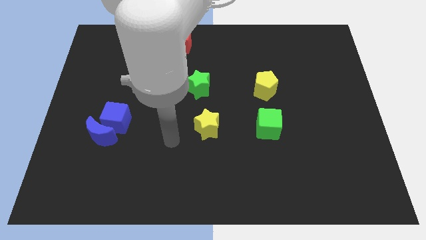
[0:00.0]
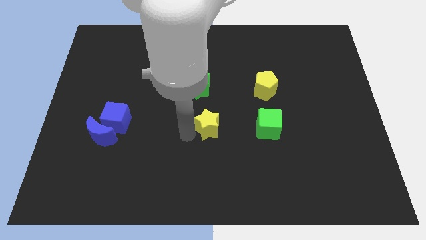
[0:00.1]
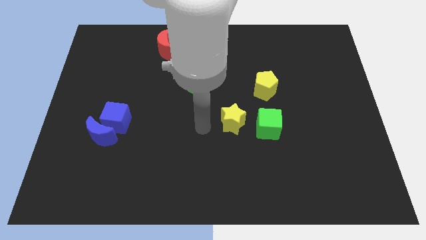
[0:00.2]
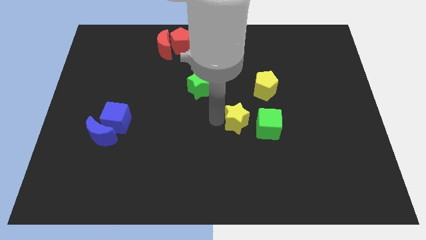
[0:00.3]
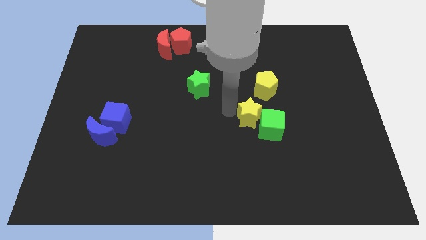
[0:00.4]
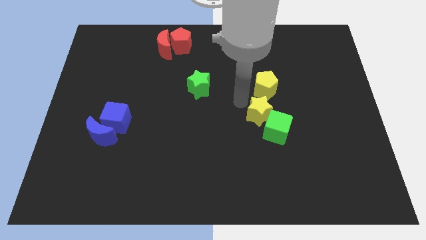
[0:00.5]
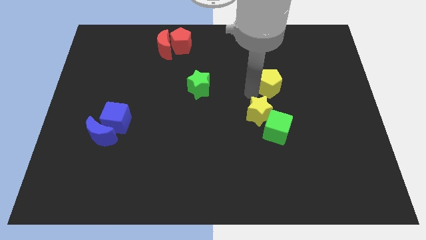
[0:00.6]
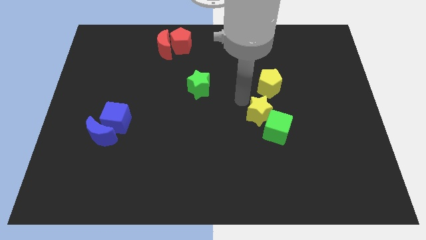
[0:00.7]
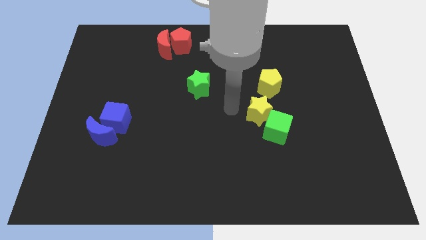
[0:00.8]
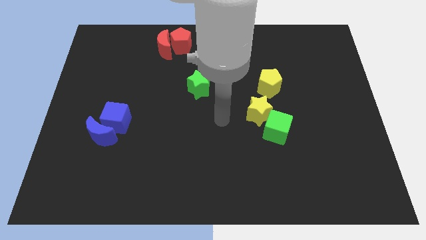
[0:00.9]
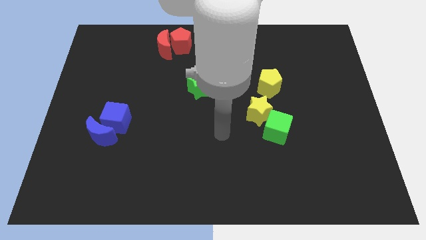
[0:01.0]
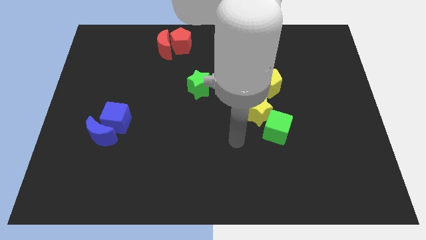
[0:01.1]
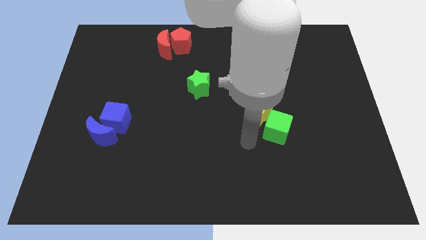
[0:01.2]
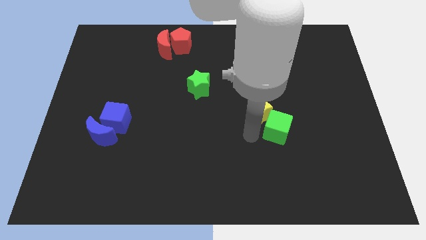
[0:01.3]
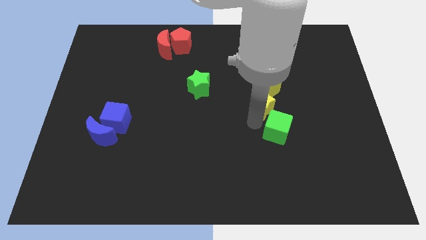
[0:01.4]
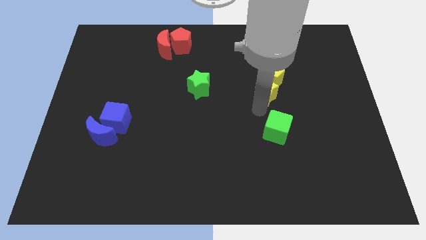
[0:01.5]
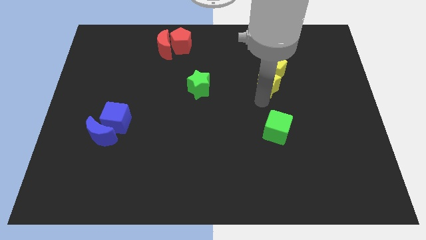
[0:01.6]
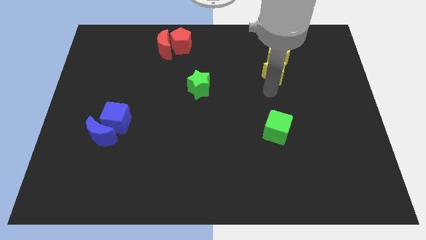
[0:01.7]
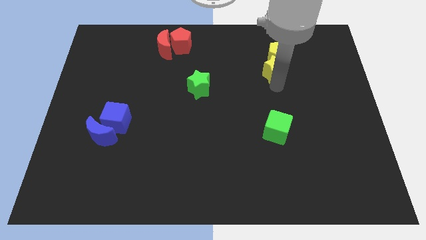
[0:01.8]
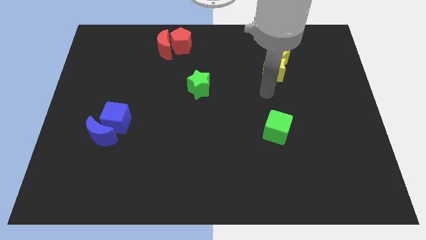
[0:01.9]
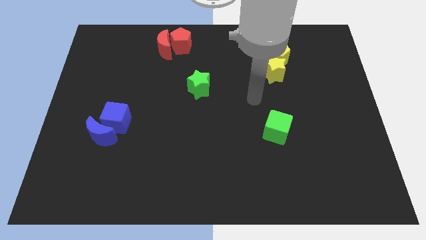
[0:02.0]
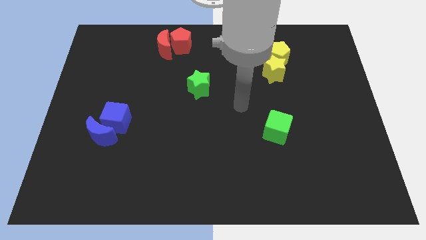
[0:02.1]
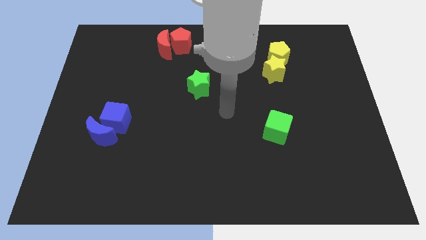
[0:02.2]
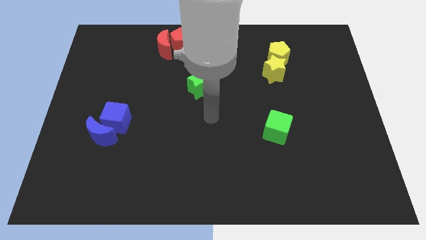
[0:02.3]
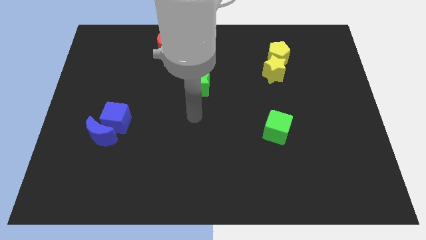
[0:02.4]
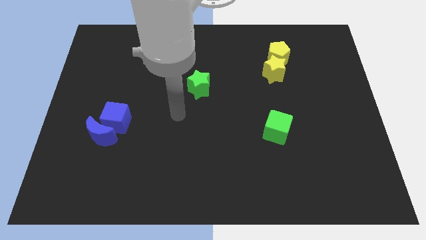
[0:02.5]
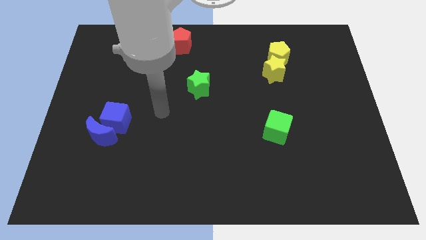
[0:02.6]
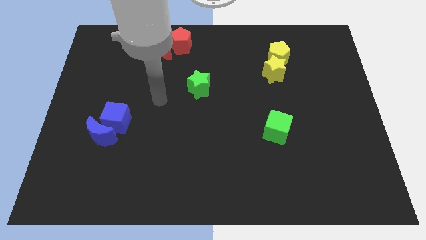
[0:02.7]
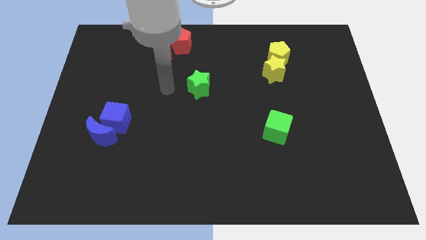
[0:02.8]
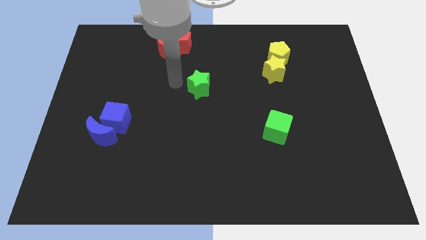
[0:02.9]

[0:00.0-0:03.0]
push the yellow pentagon with a yellow star towards the top right of the board

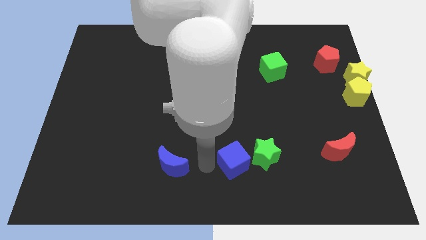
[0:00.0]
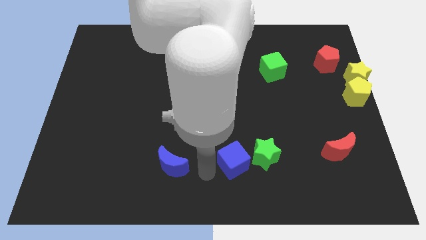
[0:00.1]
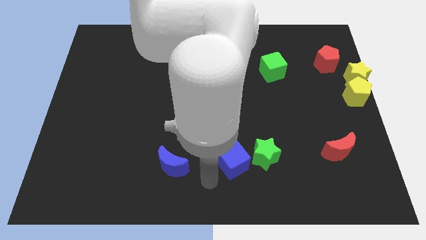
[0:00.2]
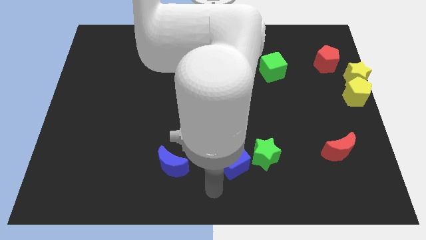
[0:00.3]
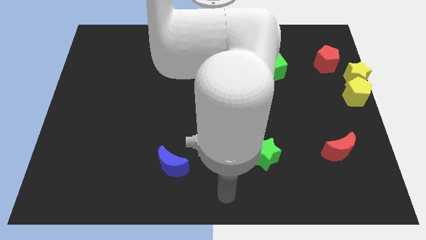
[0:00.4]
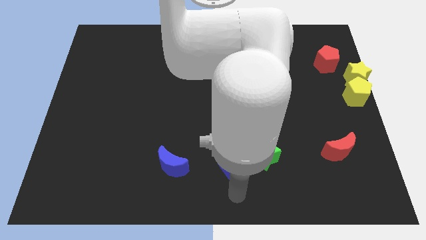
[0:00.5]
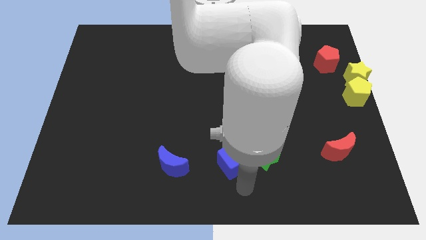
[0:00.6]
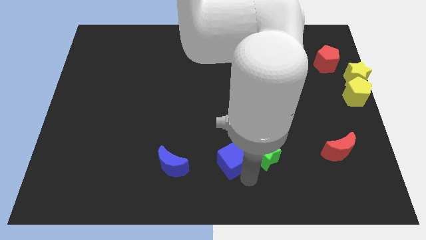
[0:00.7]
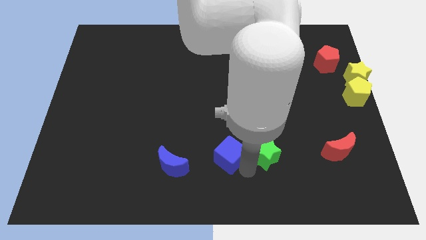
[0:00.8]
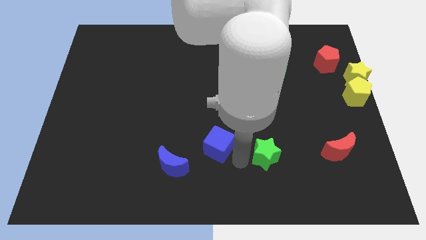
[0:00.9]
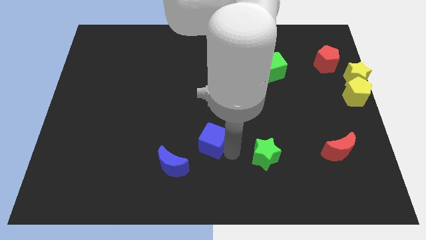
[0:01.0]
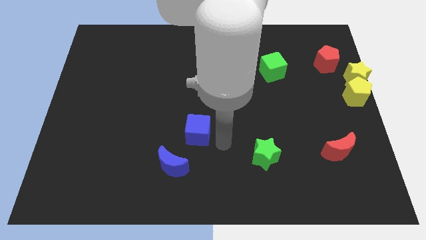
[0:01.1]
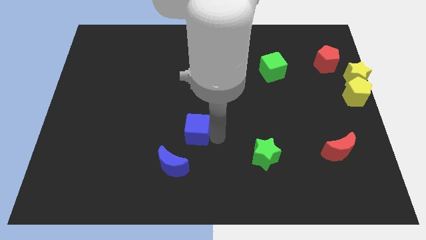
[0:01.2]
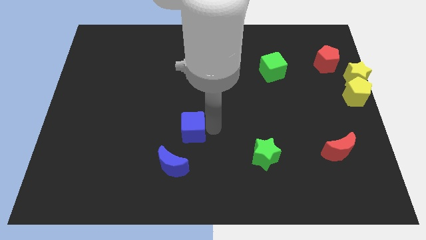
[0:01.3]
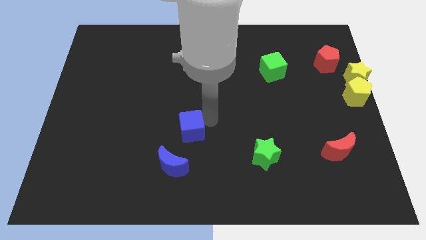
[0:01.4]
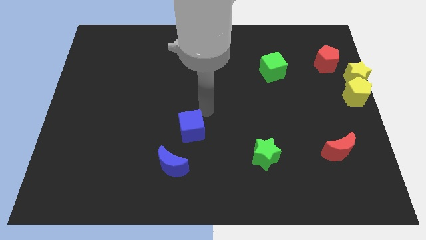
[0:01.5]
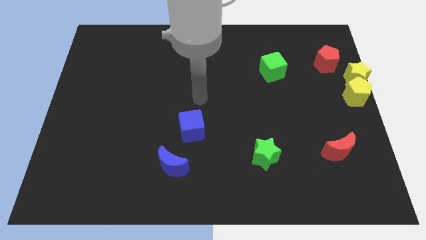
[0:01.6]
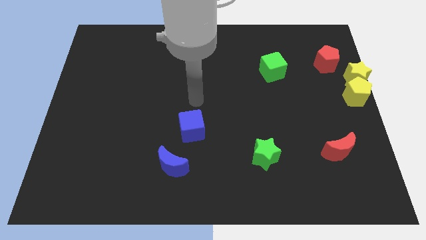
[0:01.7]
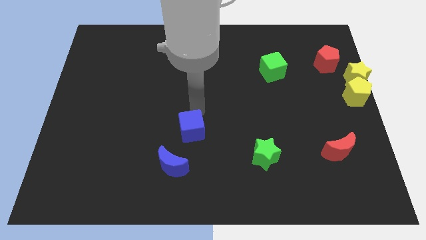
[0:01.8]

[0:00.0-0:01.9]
place a blue cube above the blue moon

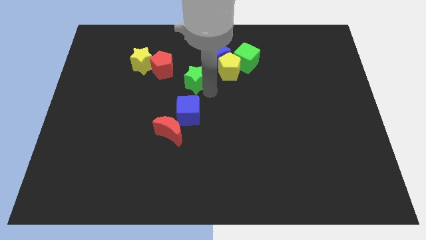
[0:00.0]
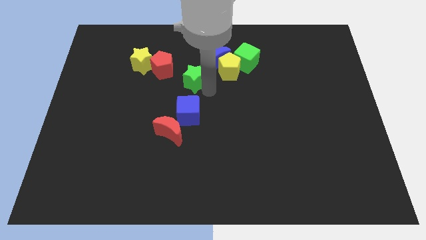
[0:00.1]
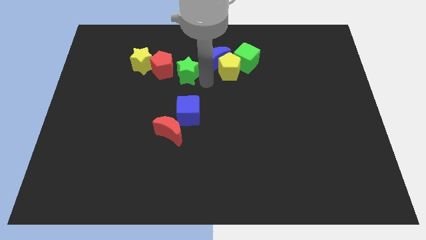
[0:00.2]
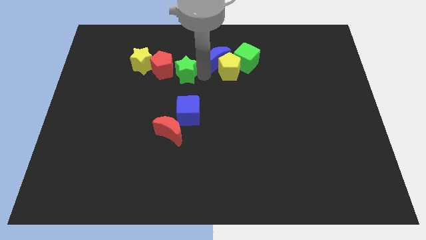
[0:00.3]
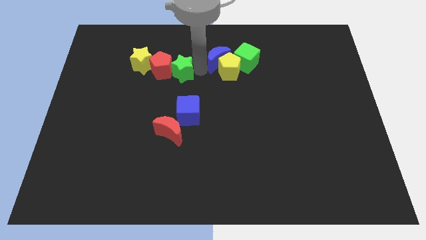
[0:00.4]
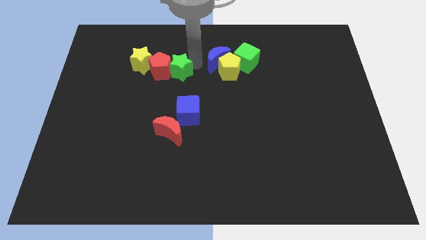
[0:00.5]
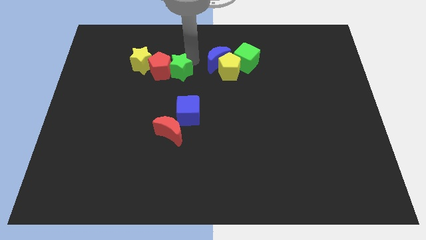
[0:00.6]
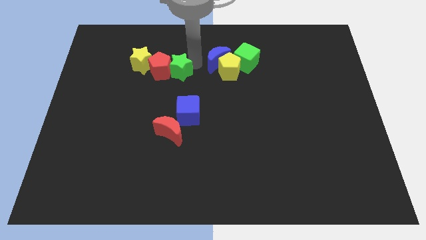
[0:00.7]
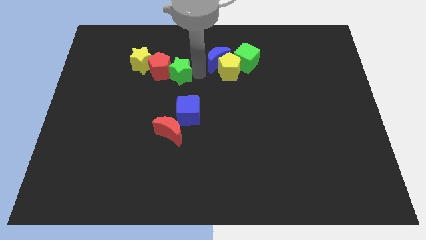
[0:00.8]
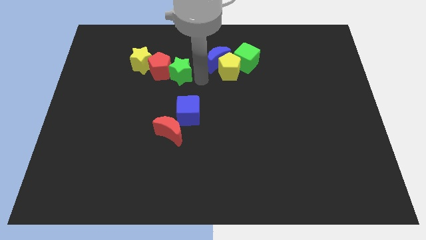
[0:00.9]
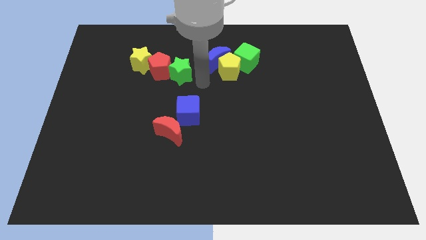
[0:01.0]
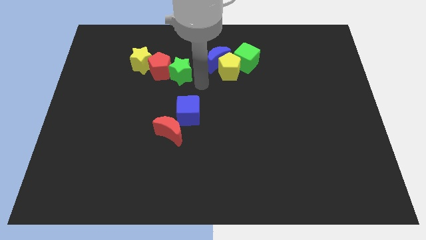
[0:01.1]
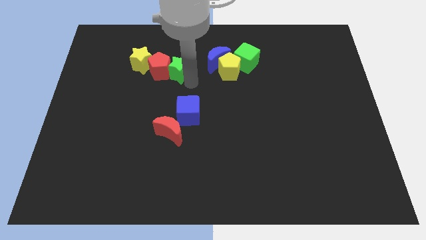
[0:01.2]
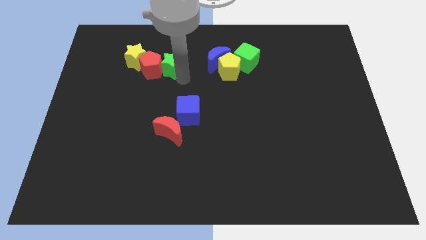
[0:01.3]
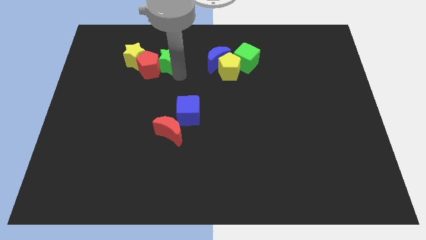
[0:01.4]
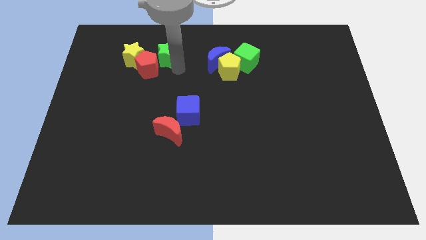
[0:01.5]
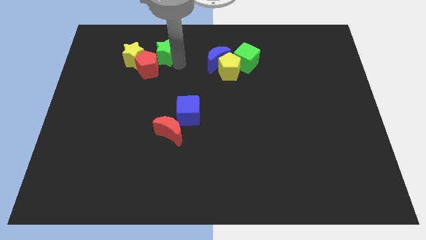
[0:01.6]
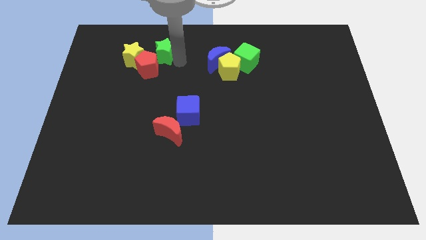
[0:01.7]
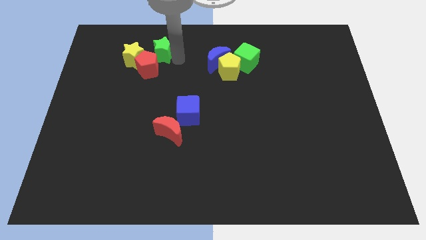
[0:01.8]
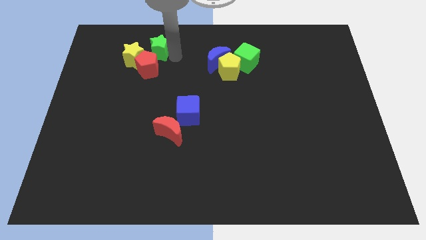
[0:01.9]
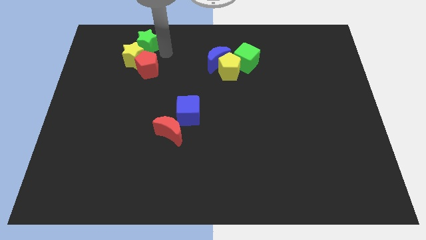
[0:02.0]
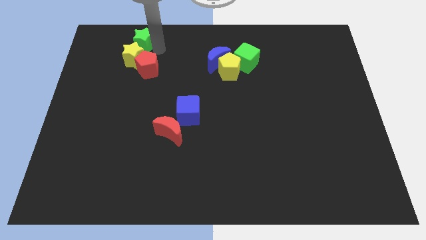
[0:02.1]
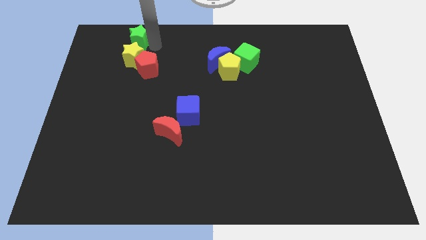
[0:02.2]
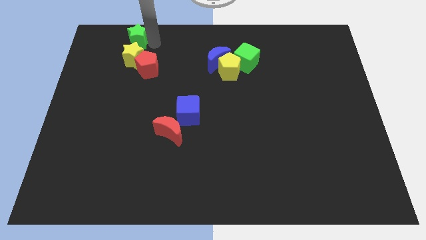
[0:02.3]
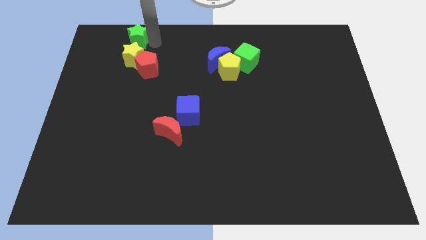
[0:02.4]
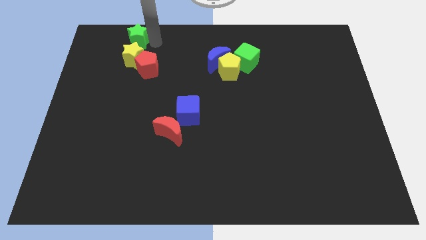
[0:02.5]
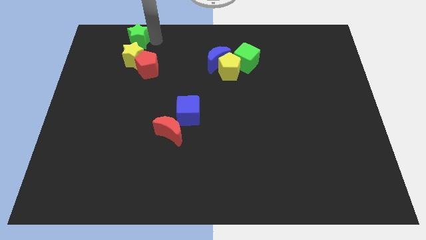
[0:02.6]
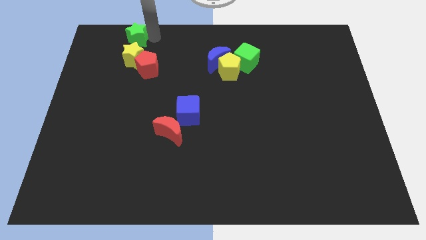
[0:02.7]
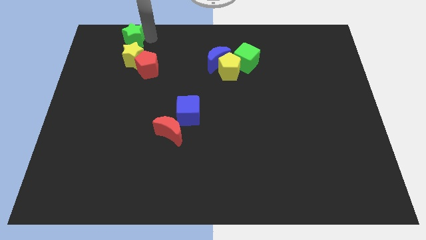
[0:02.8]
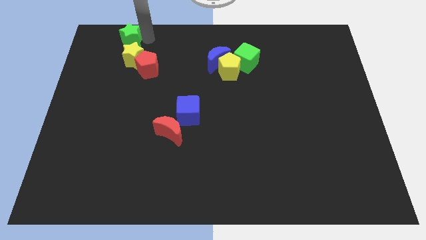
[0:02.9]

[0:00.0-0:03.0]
place the green star above the yellow star

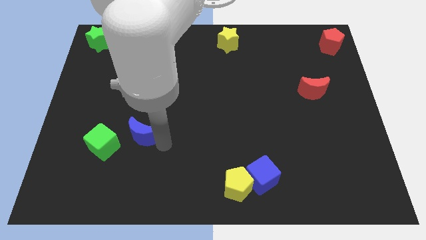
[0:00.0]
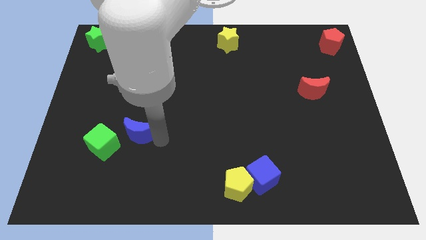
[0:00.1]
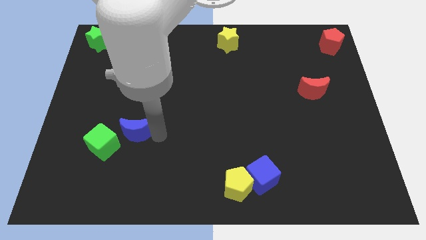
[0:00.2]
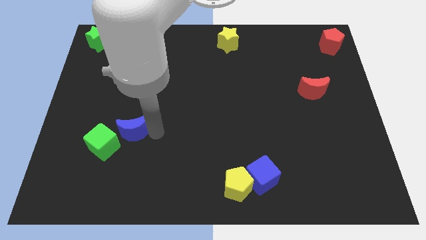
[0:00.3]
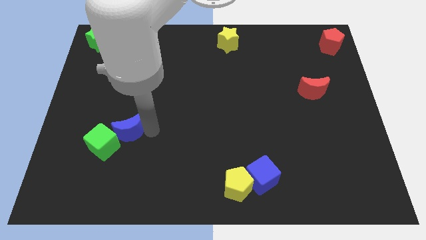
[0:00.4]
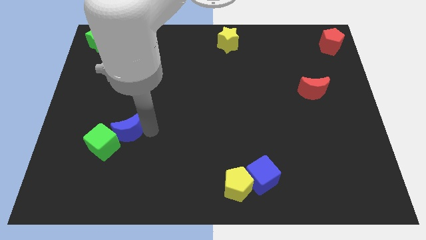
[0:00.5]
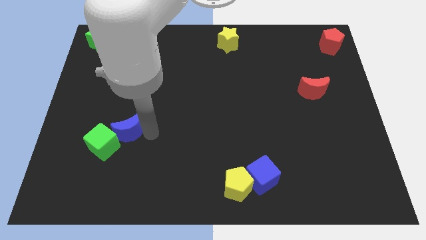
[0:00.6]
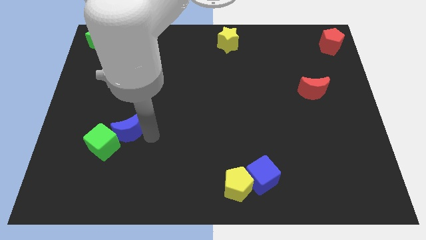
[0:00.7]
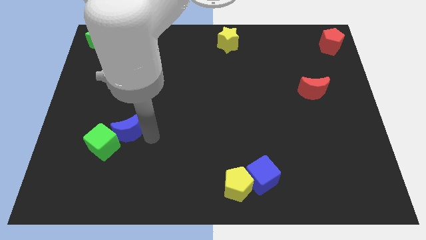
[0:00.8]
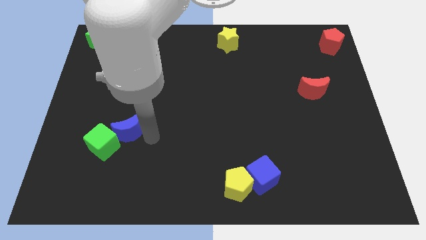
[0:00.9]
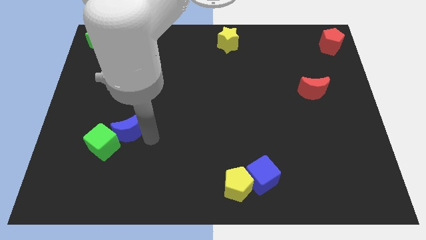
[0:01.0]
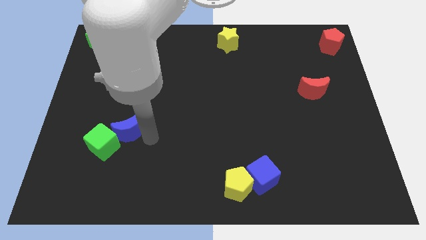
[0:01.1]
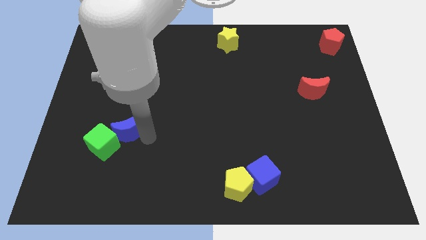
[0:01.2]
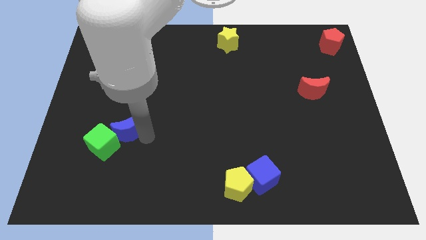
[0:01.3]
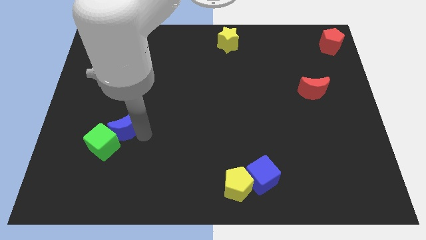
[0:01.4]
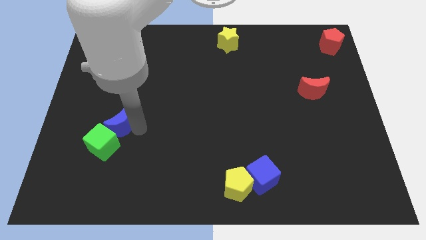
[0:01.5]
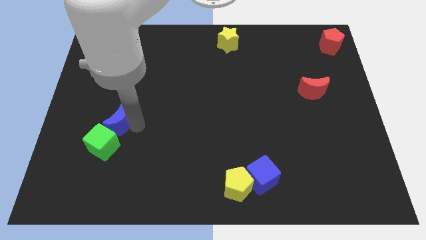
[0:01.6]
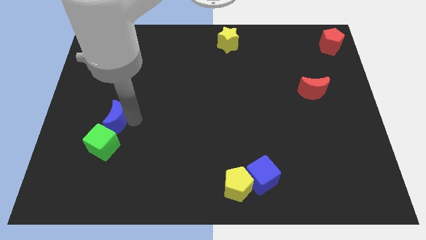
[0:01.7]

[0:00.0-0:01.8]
push the blue moon into the green cube
